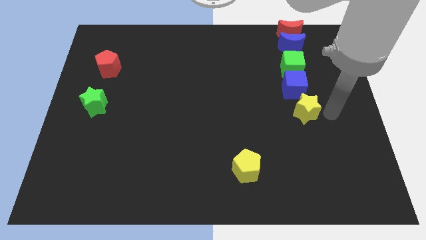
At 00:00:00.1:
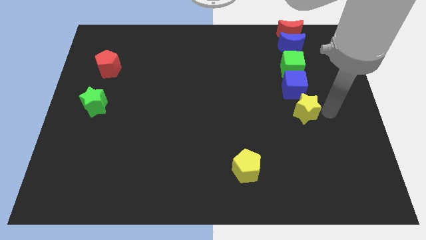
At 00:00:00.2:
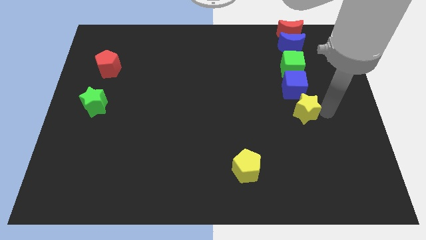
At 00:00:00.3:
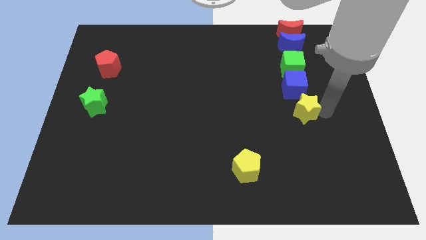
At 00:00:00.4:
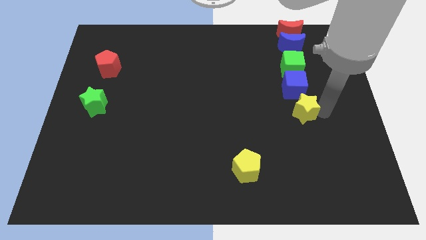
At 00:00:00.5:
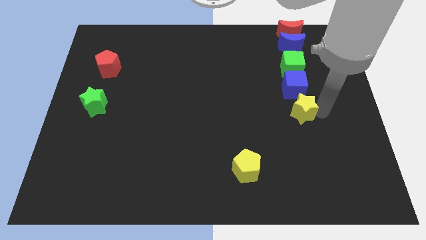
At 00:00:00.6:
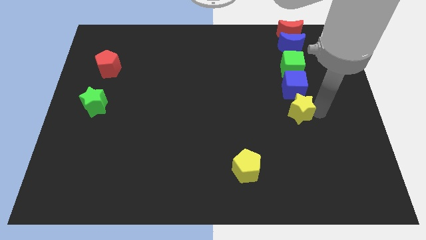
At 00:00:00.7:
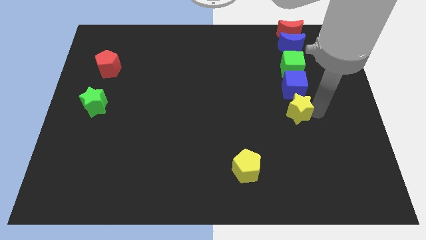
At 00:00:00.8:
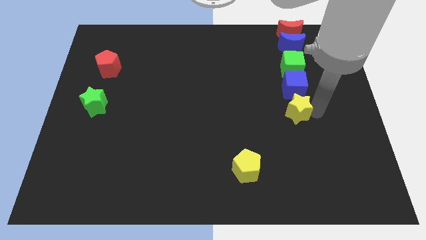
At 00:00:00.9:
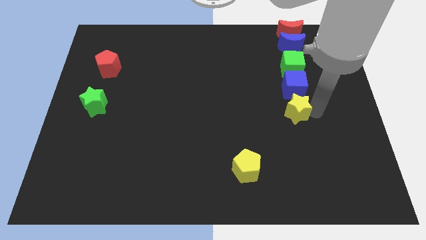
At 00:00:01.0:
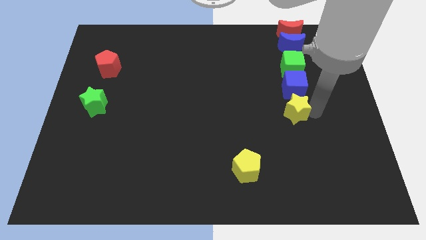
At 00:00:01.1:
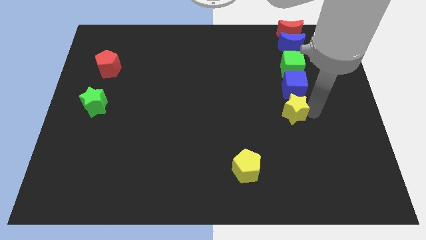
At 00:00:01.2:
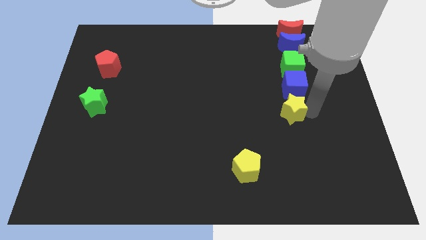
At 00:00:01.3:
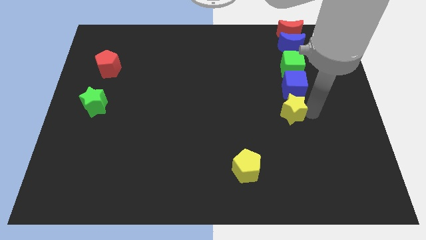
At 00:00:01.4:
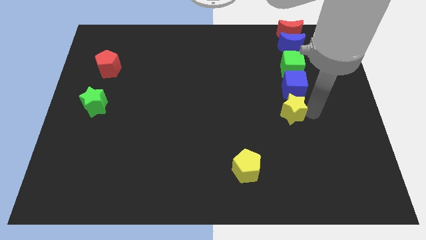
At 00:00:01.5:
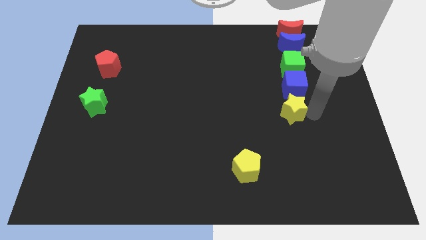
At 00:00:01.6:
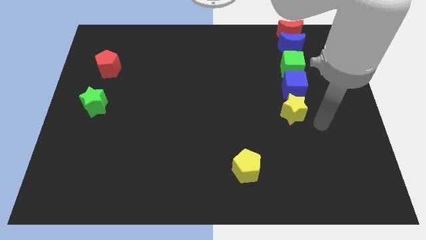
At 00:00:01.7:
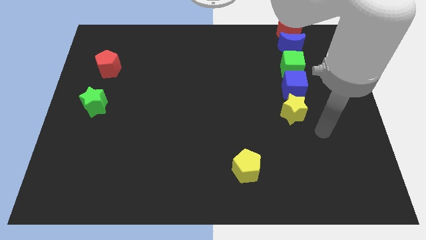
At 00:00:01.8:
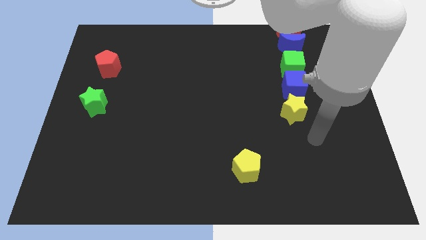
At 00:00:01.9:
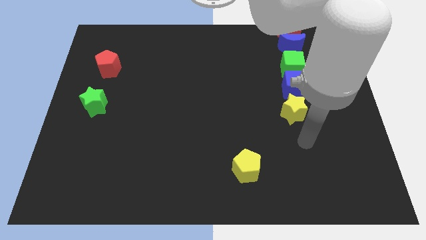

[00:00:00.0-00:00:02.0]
place the yellow star below the blue cube

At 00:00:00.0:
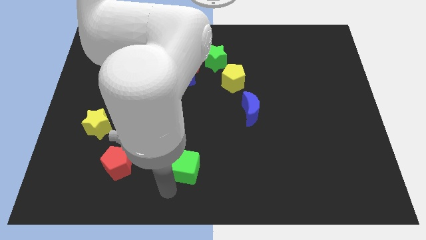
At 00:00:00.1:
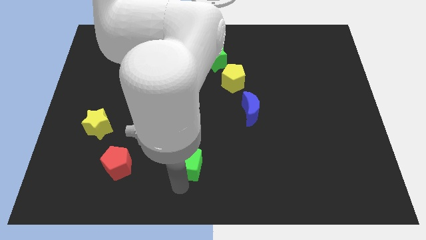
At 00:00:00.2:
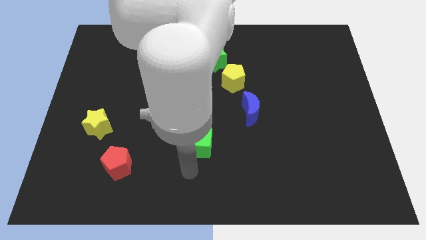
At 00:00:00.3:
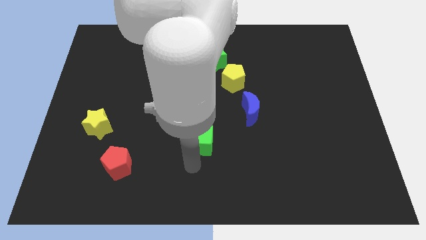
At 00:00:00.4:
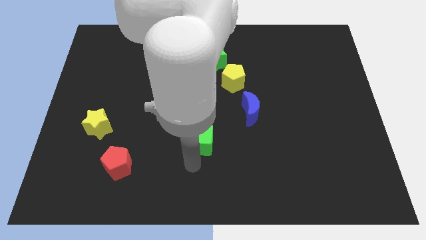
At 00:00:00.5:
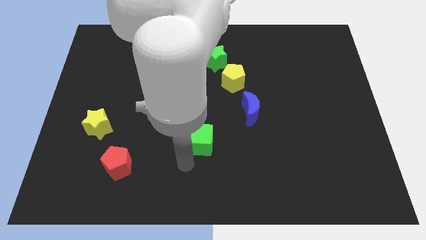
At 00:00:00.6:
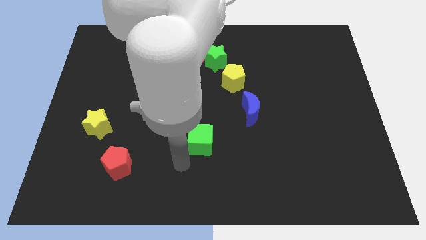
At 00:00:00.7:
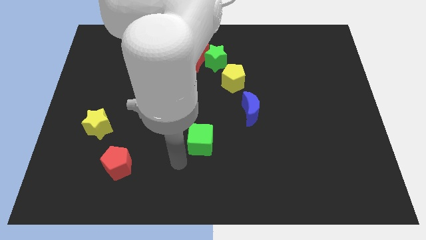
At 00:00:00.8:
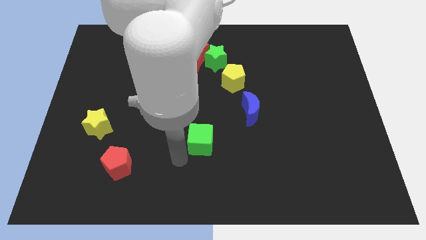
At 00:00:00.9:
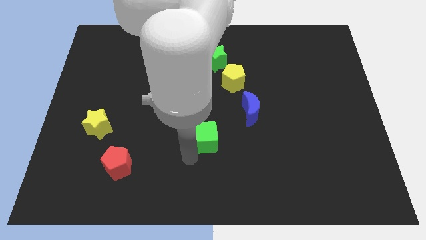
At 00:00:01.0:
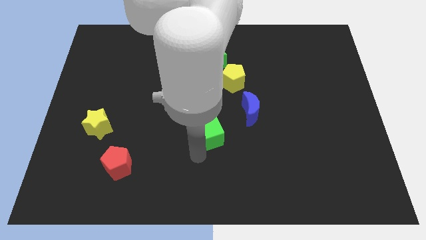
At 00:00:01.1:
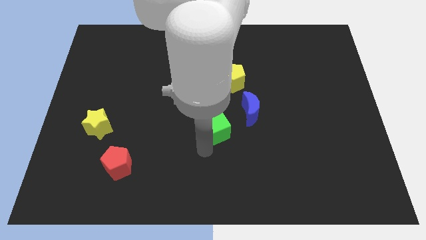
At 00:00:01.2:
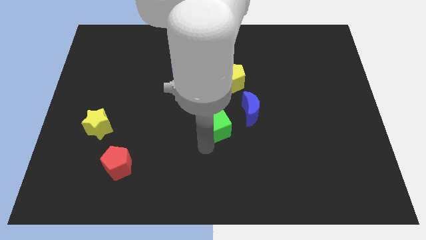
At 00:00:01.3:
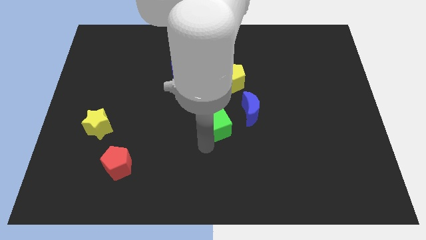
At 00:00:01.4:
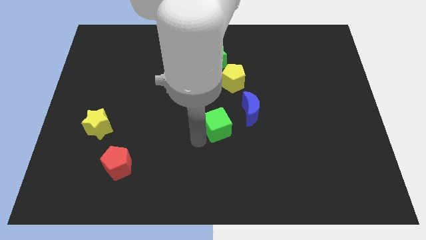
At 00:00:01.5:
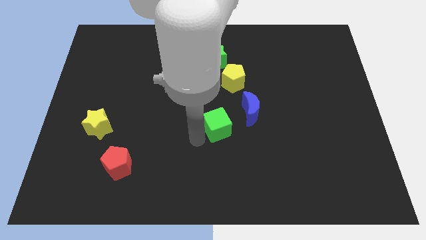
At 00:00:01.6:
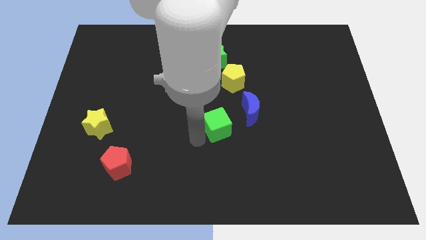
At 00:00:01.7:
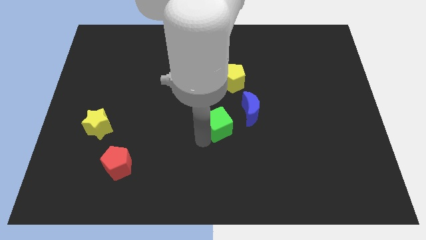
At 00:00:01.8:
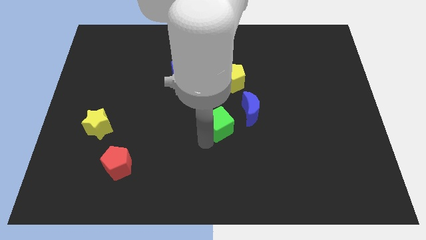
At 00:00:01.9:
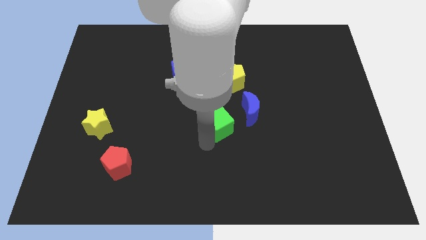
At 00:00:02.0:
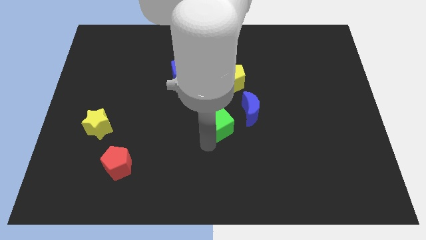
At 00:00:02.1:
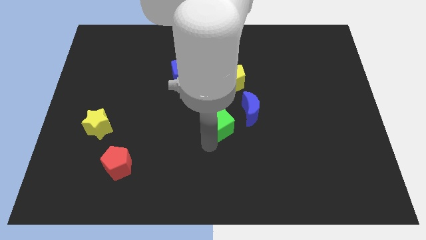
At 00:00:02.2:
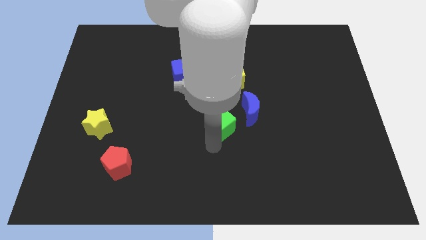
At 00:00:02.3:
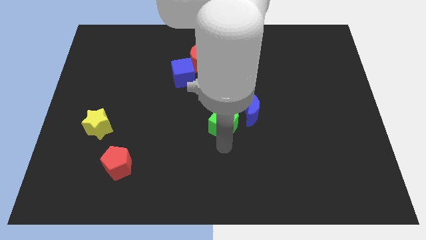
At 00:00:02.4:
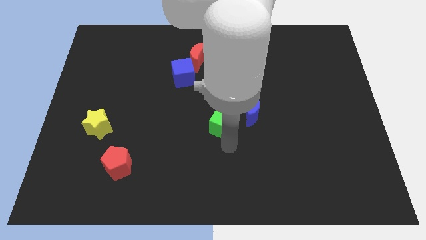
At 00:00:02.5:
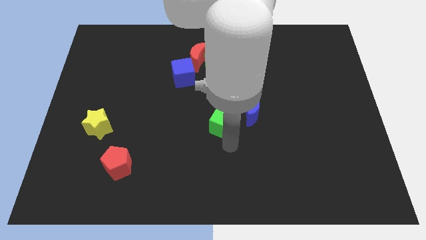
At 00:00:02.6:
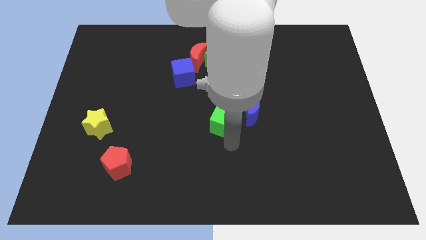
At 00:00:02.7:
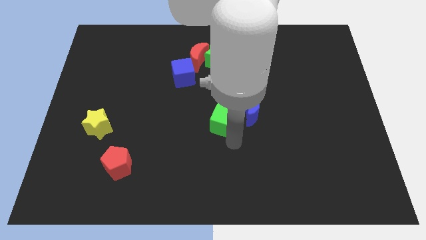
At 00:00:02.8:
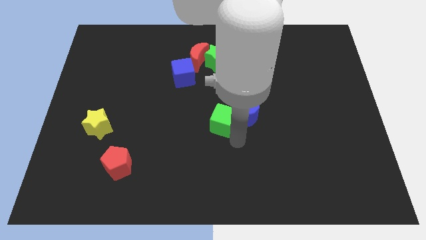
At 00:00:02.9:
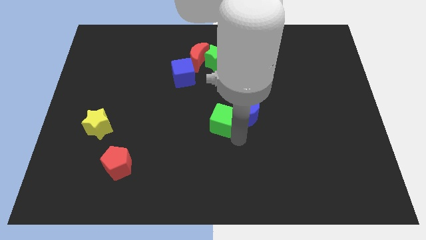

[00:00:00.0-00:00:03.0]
push the green cube to the center of the board

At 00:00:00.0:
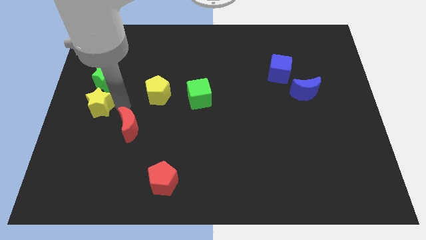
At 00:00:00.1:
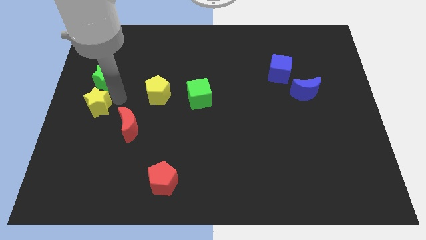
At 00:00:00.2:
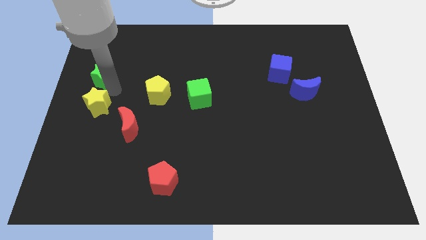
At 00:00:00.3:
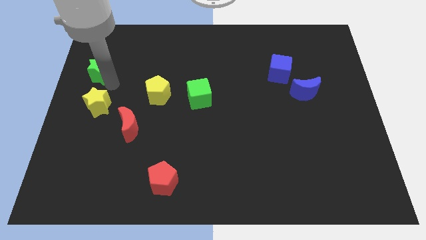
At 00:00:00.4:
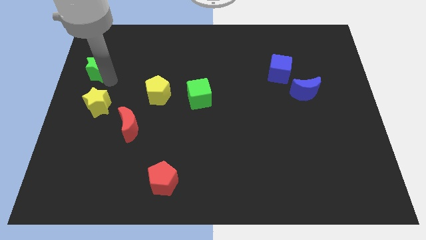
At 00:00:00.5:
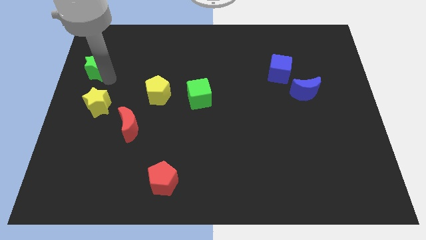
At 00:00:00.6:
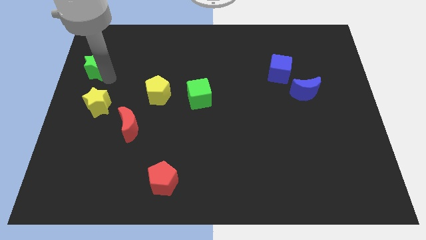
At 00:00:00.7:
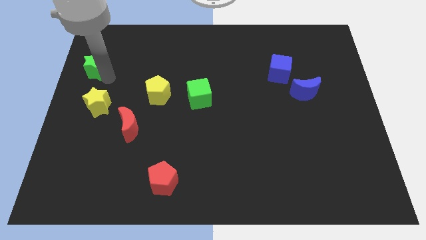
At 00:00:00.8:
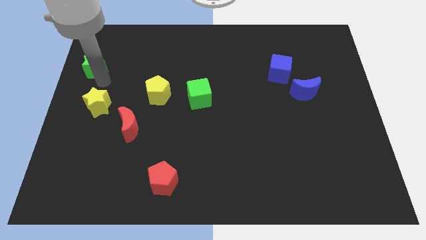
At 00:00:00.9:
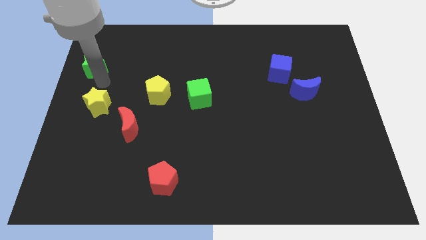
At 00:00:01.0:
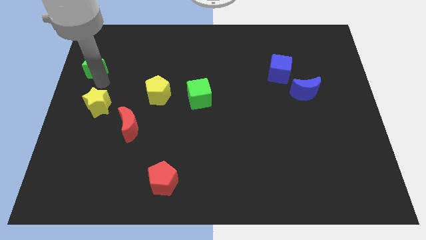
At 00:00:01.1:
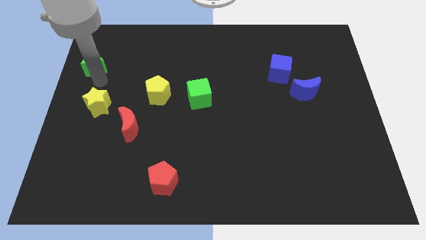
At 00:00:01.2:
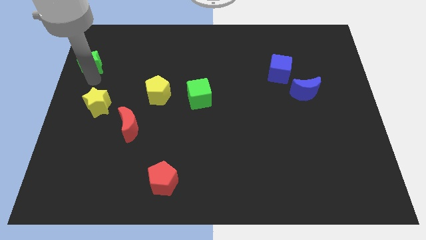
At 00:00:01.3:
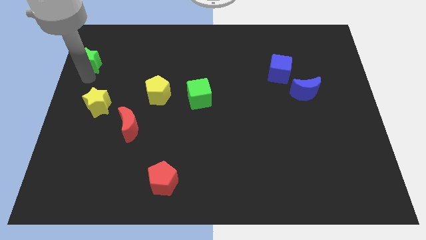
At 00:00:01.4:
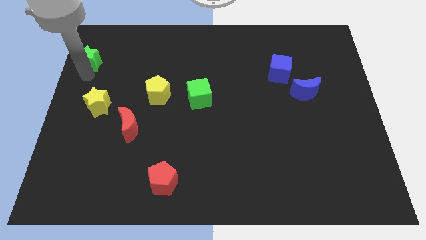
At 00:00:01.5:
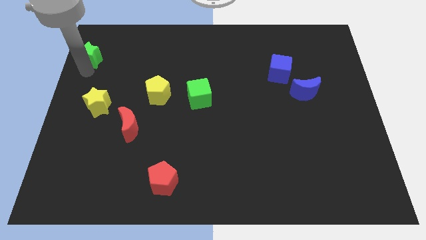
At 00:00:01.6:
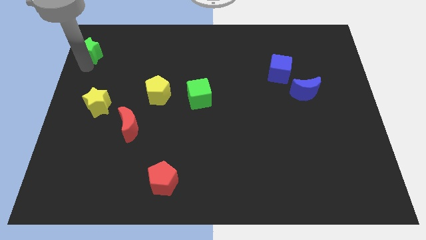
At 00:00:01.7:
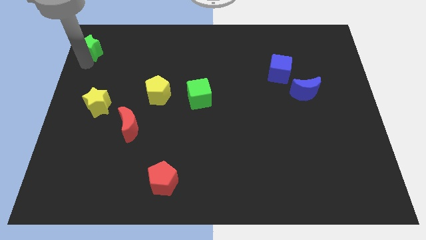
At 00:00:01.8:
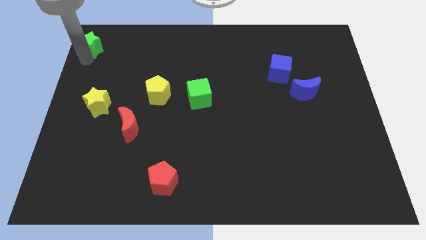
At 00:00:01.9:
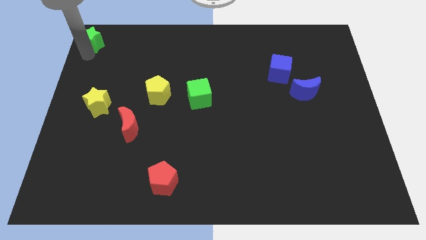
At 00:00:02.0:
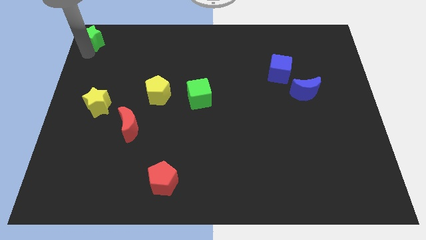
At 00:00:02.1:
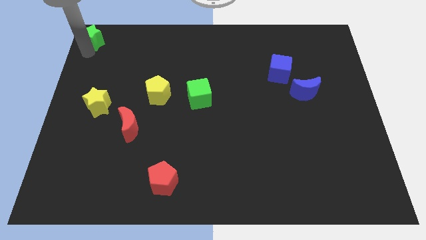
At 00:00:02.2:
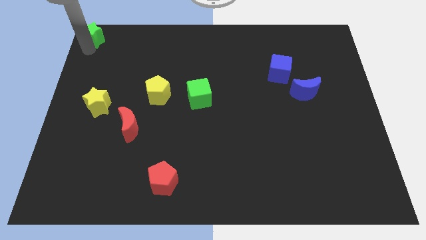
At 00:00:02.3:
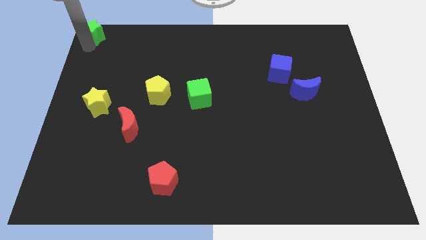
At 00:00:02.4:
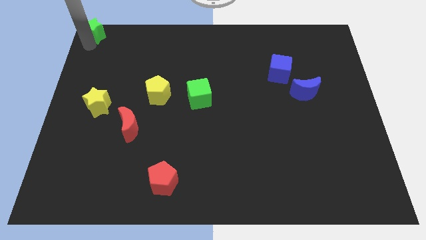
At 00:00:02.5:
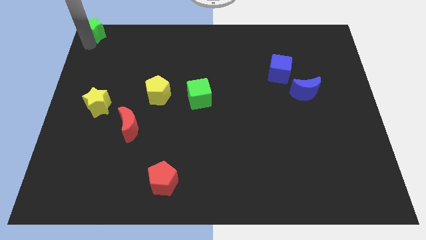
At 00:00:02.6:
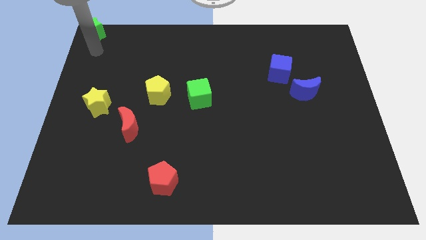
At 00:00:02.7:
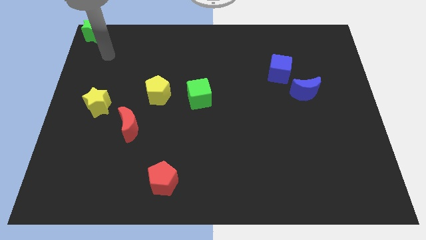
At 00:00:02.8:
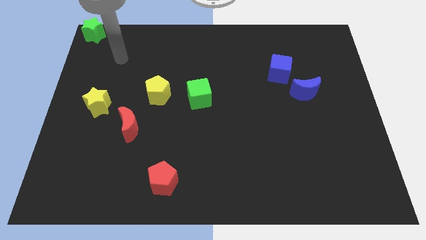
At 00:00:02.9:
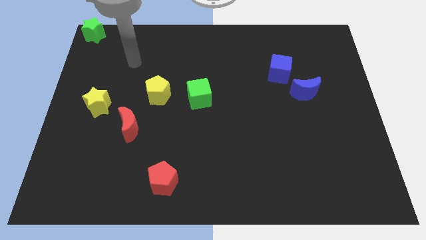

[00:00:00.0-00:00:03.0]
push green star to the left top corner

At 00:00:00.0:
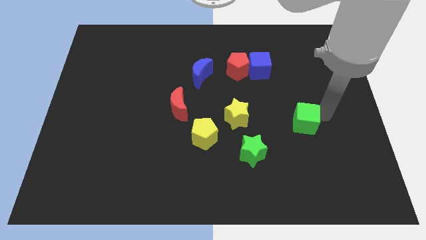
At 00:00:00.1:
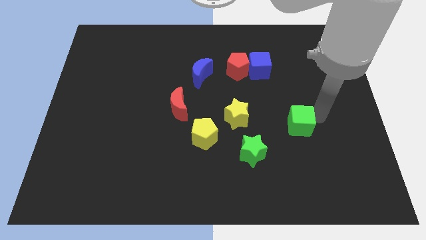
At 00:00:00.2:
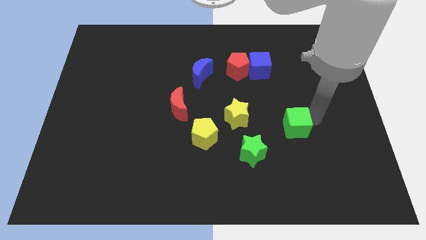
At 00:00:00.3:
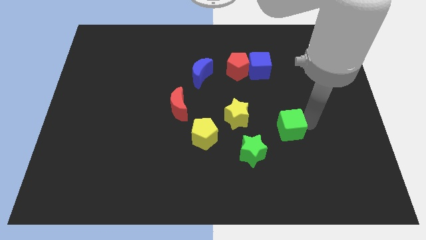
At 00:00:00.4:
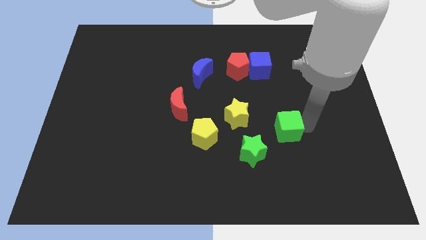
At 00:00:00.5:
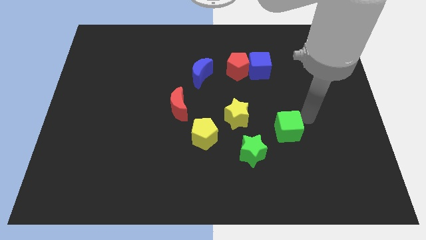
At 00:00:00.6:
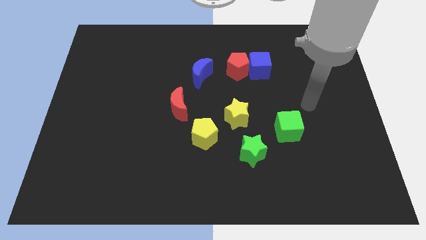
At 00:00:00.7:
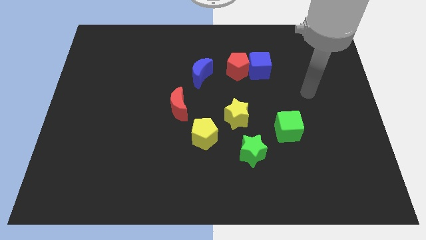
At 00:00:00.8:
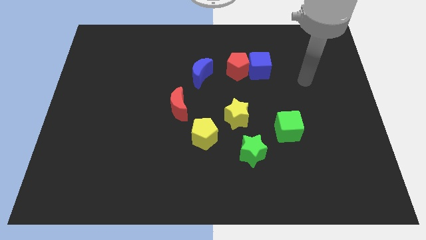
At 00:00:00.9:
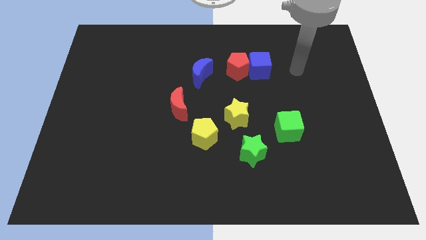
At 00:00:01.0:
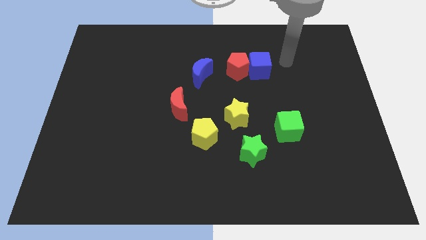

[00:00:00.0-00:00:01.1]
move green cube towards green star
